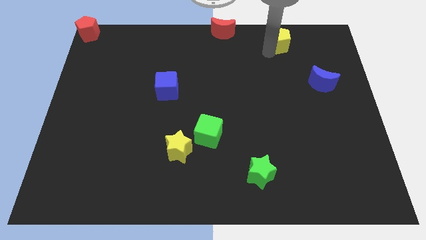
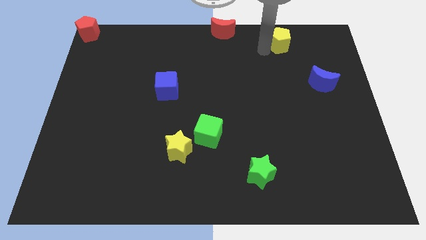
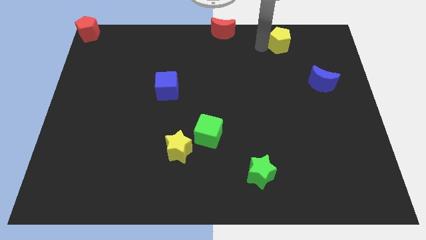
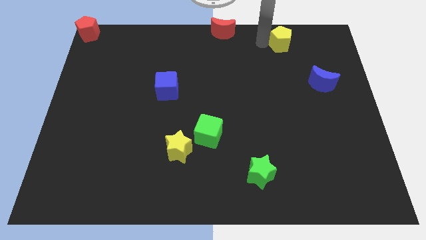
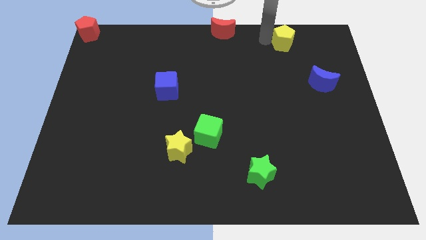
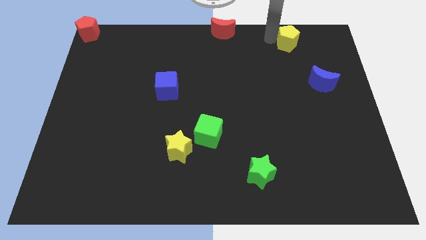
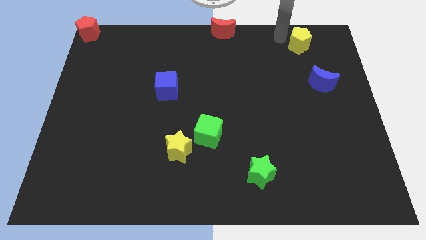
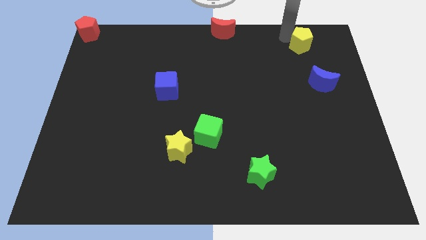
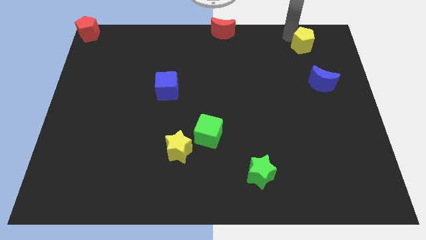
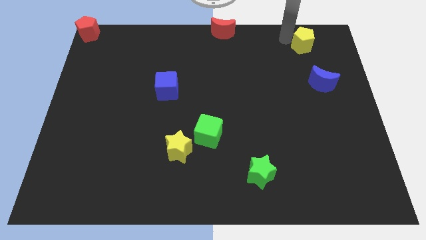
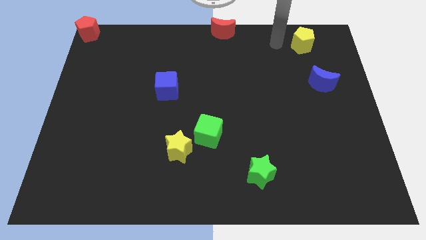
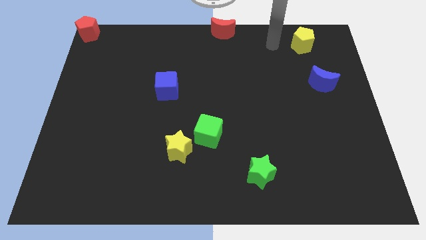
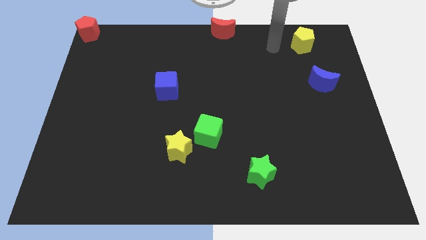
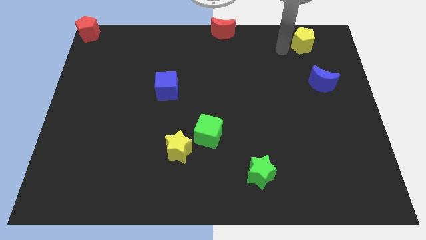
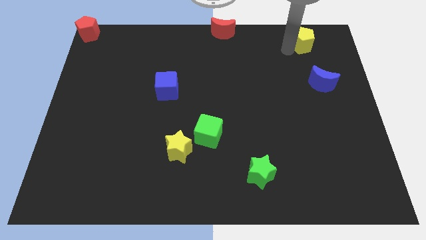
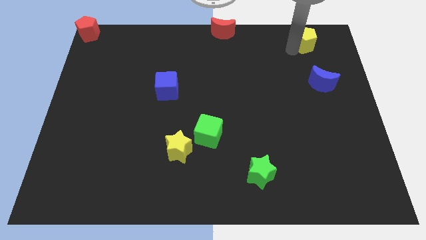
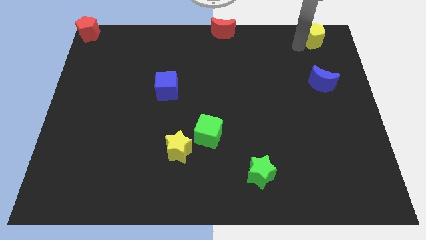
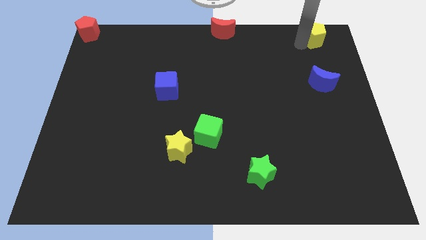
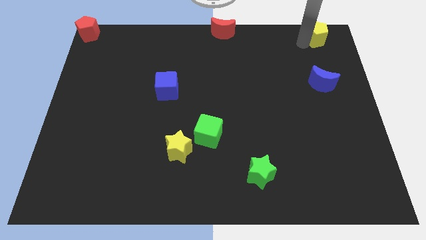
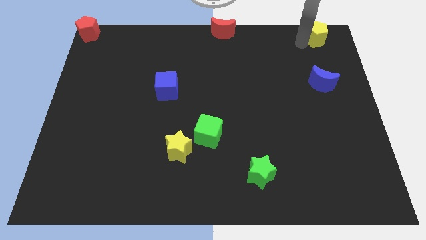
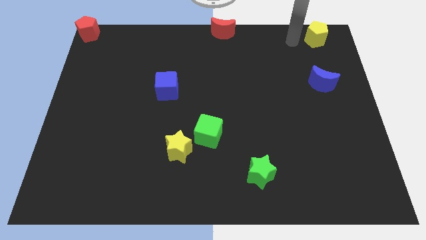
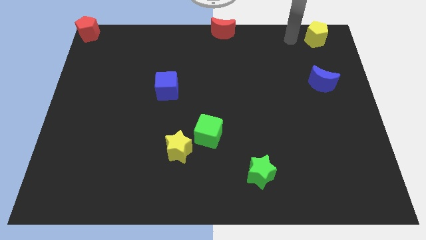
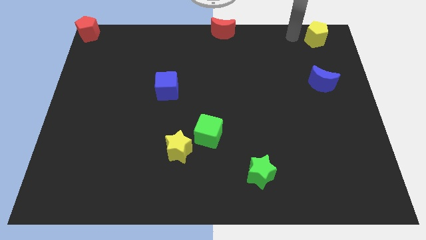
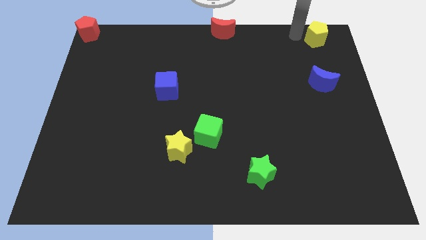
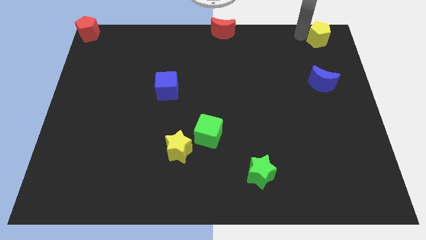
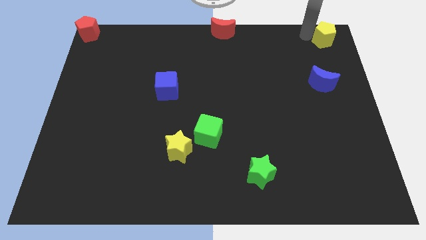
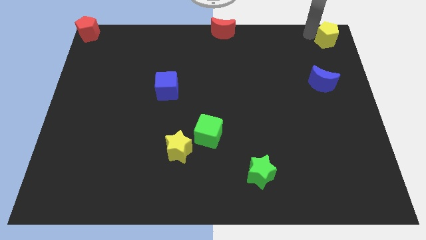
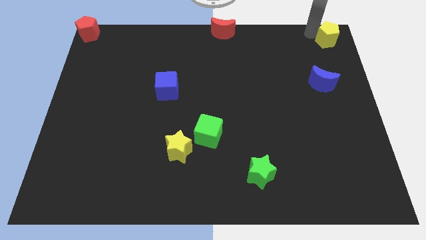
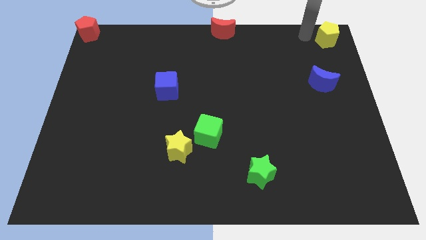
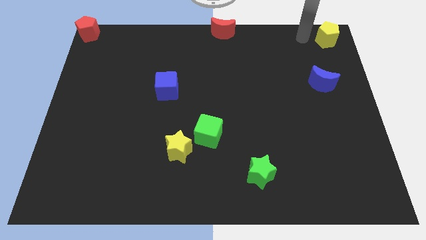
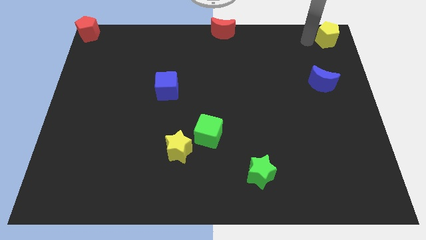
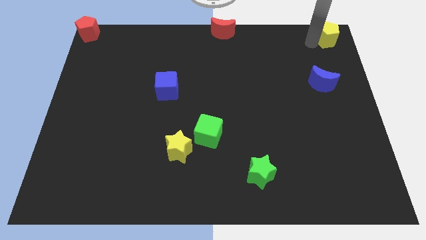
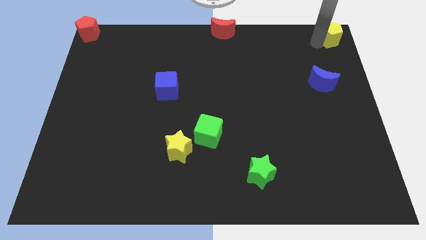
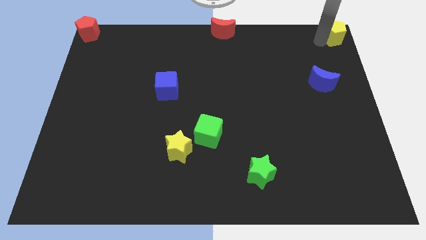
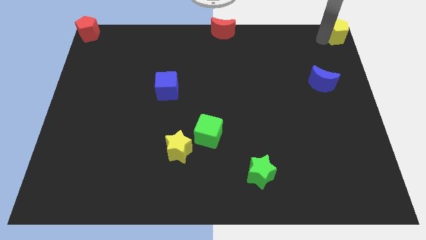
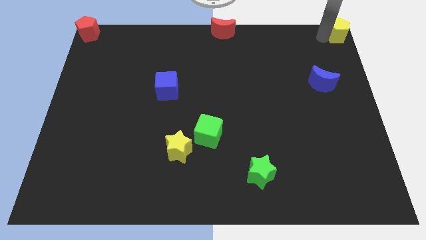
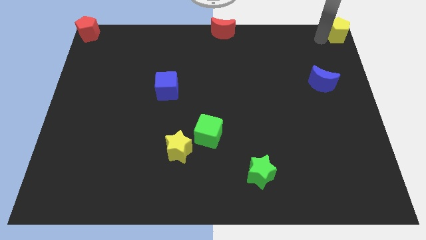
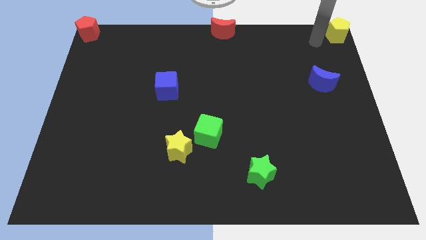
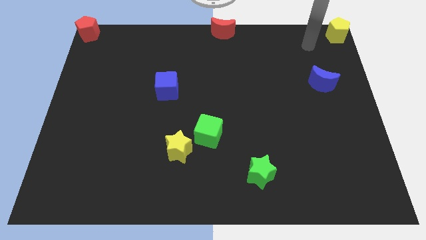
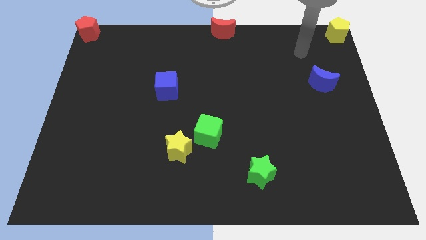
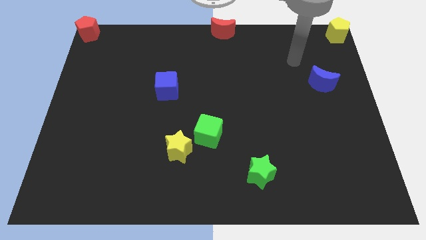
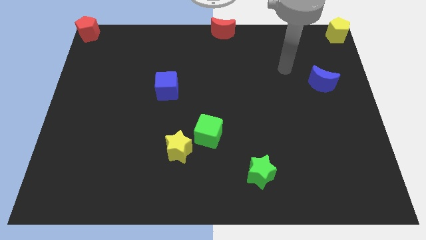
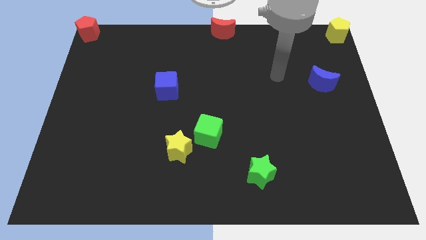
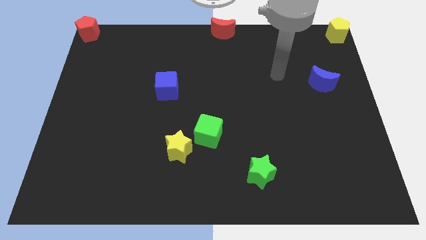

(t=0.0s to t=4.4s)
move the yellow pentagon to the top right side of the board

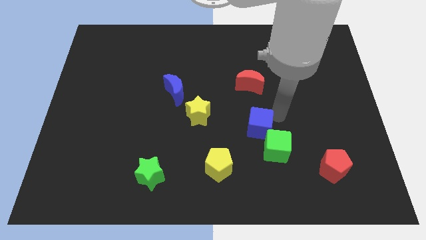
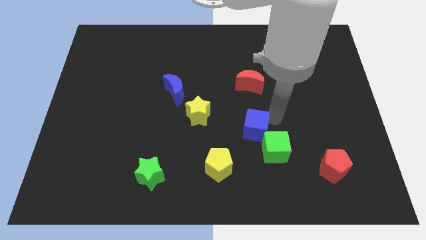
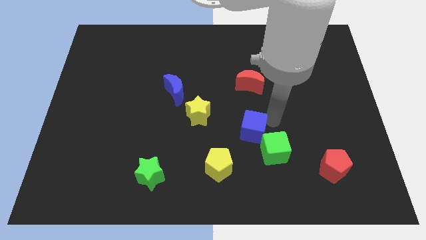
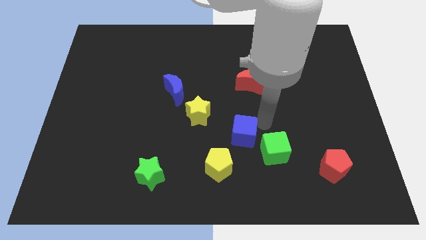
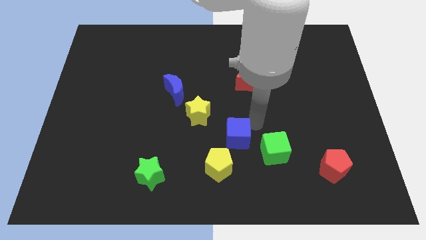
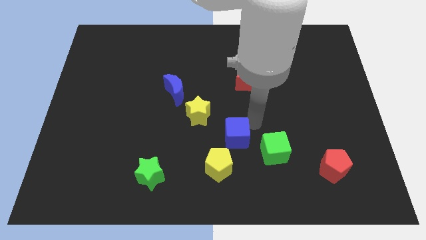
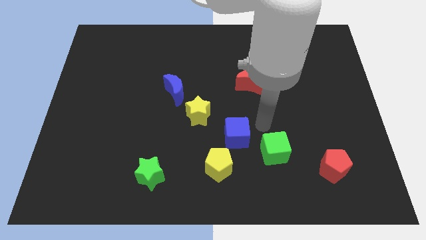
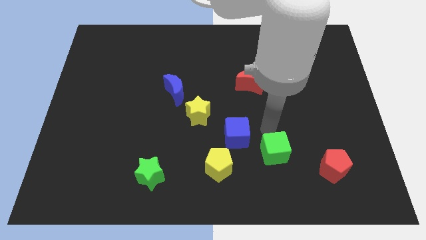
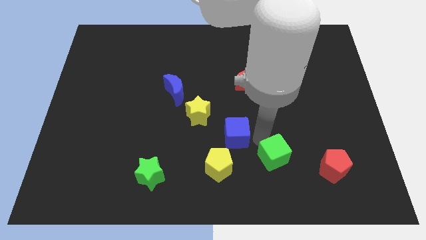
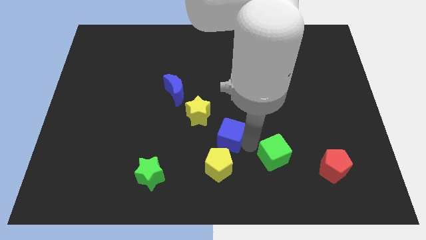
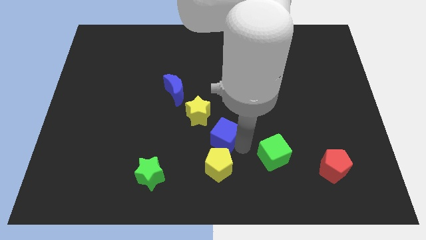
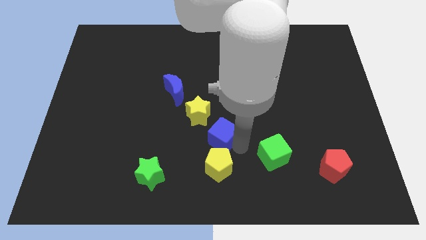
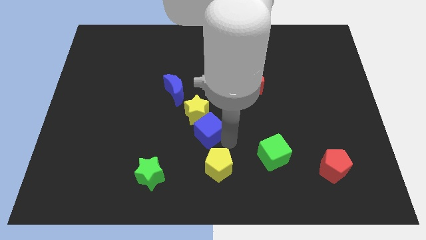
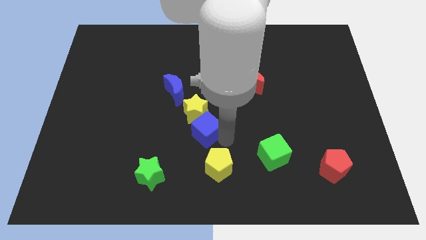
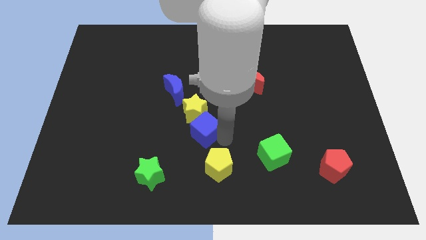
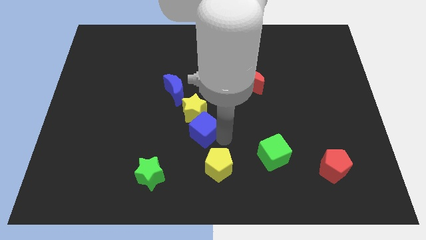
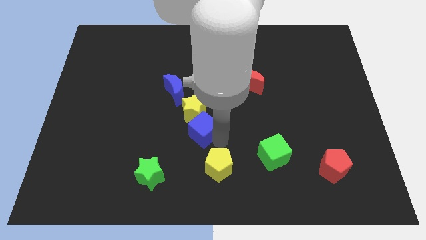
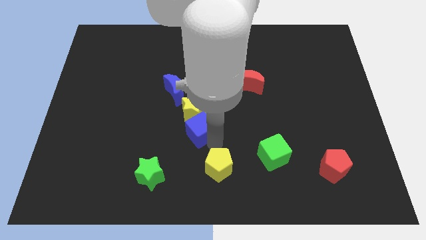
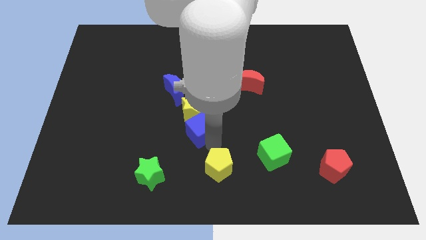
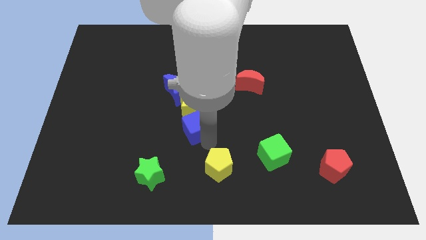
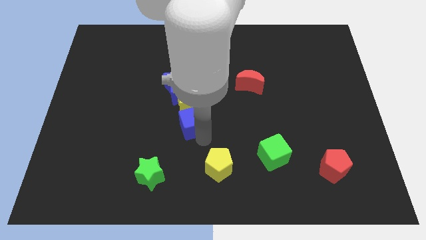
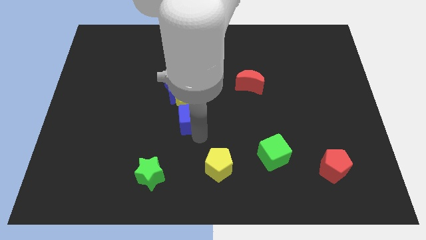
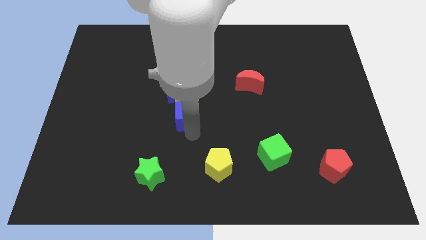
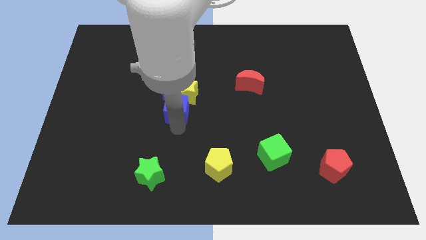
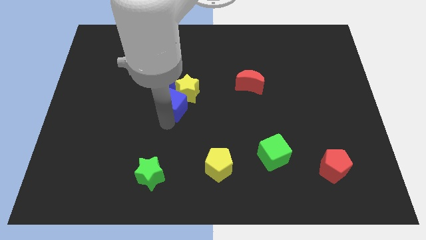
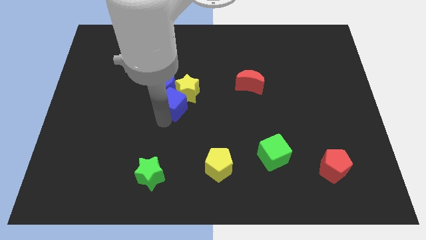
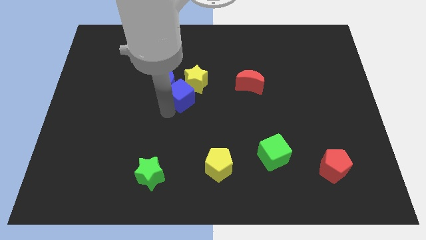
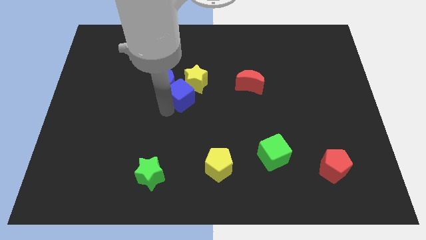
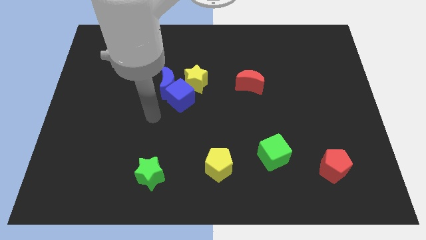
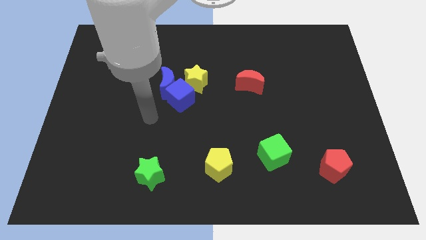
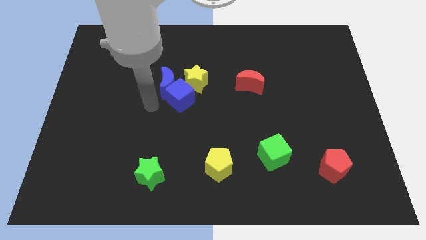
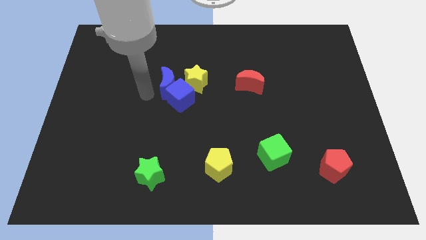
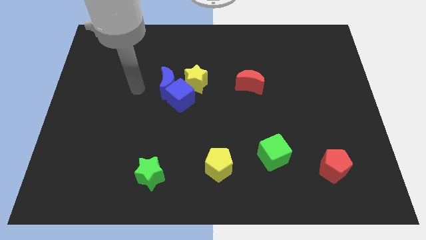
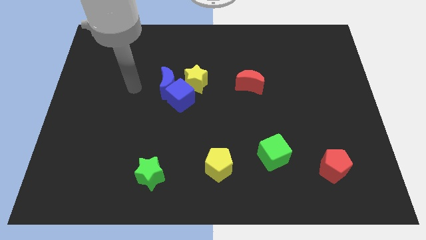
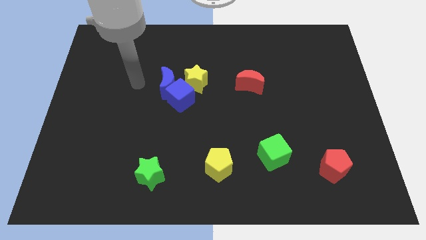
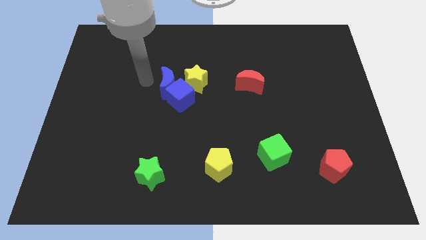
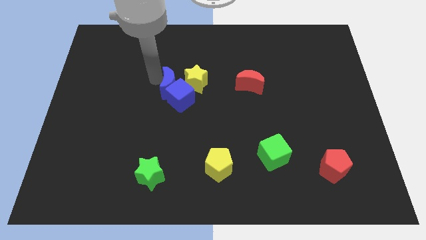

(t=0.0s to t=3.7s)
push the blue cube into the blue crescent

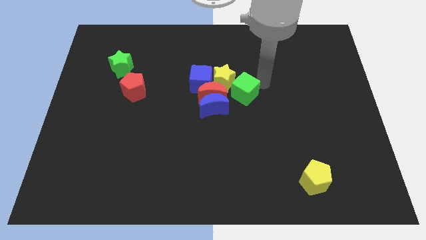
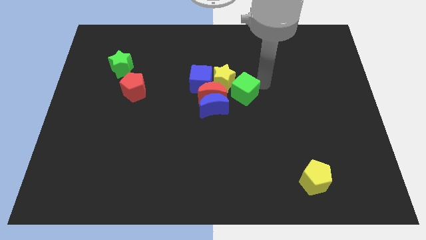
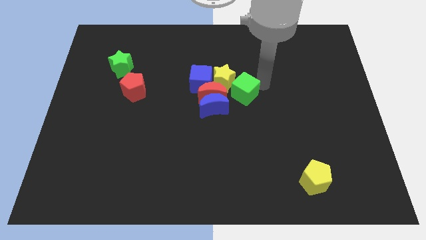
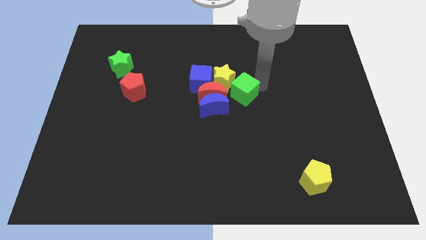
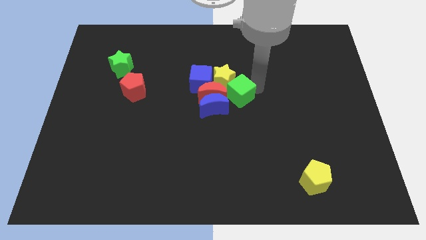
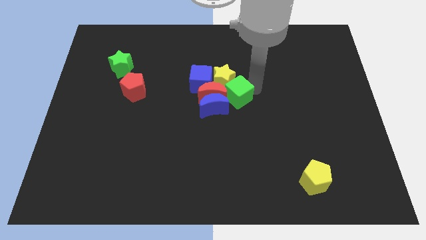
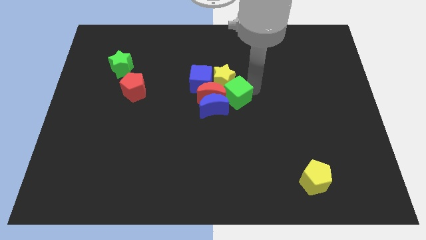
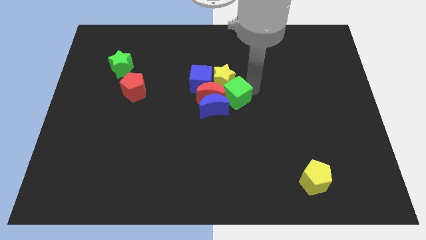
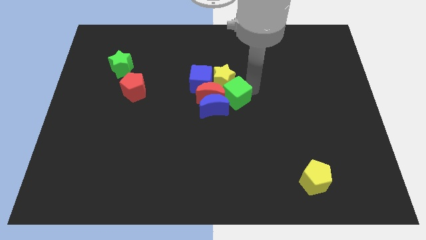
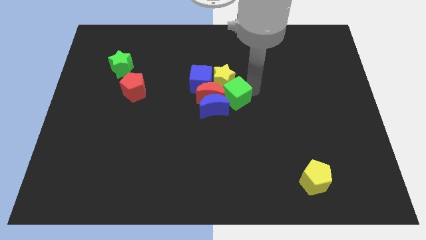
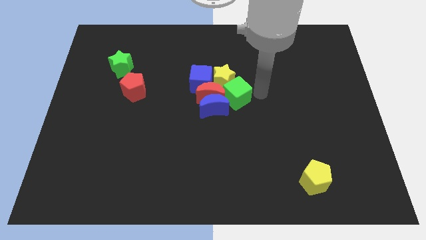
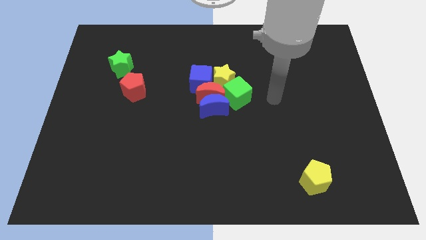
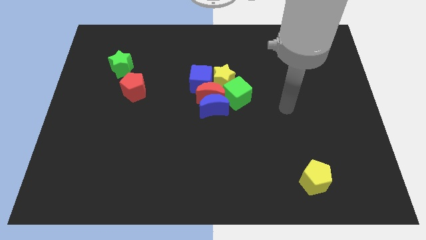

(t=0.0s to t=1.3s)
push green cube to the right of red moon
